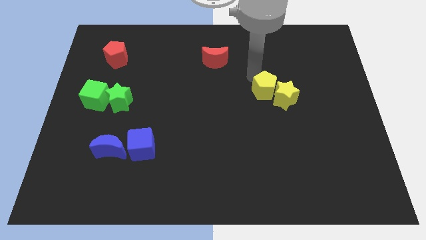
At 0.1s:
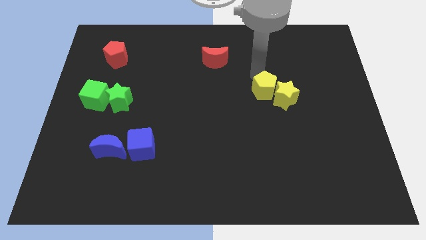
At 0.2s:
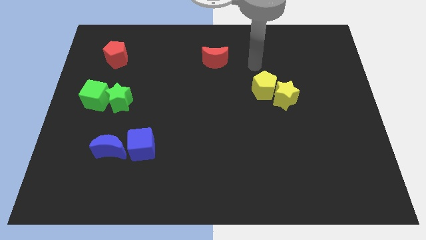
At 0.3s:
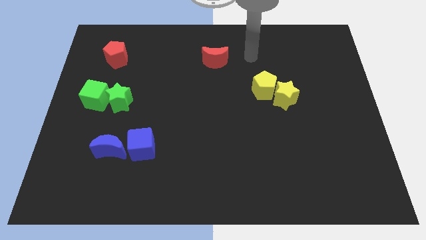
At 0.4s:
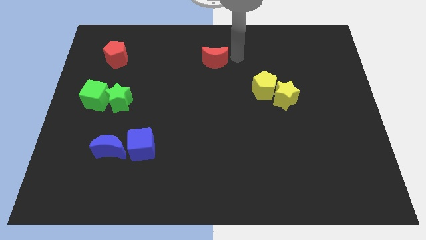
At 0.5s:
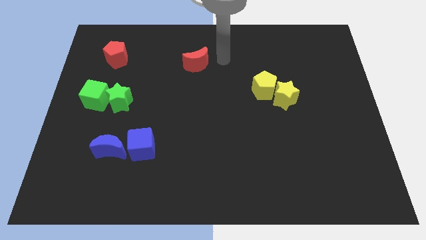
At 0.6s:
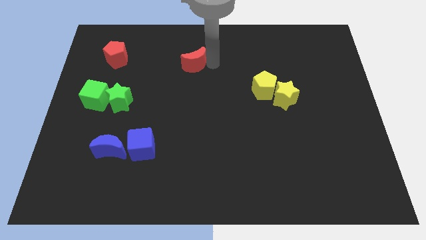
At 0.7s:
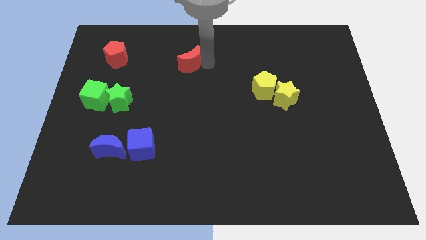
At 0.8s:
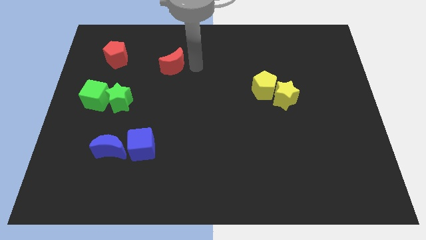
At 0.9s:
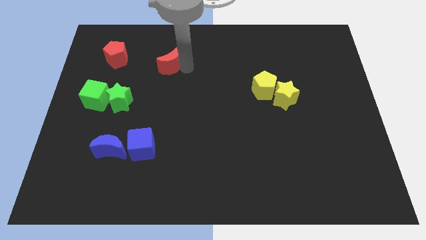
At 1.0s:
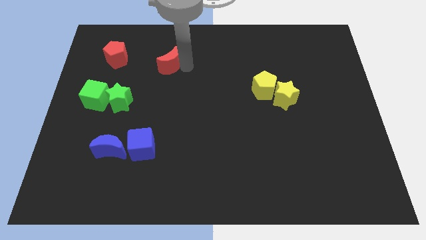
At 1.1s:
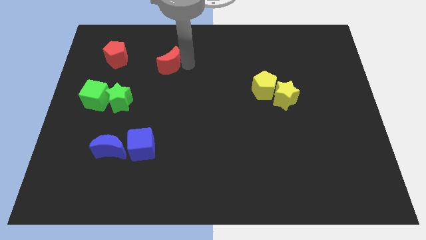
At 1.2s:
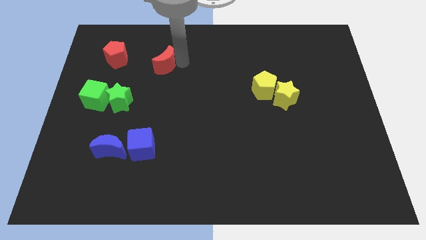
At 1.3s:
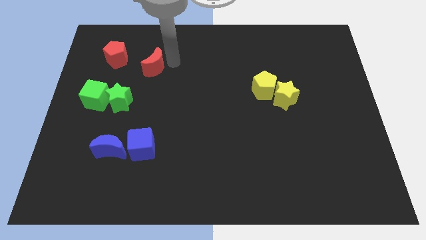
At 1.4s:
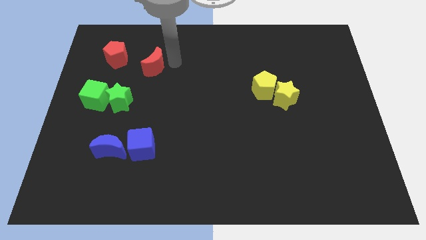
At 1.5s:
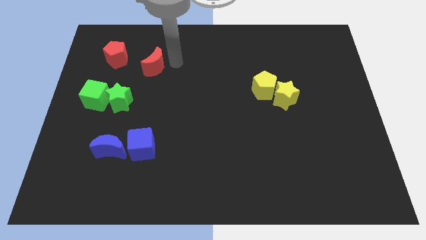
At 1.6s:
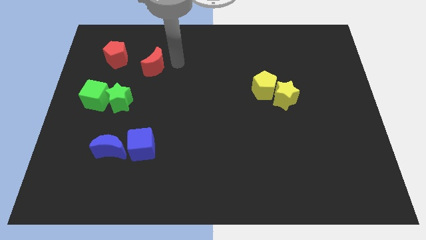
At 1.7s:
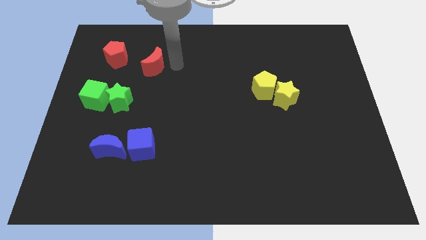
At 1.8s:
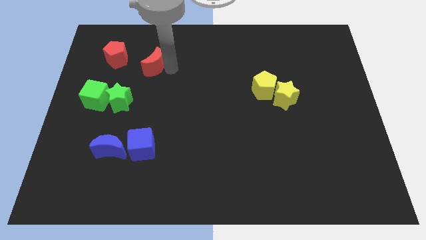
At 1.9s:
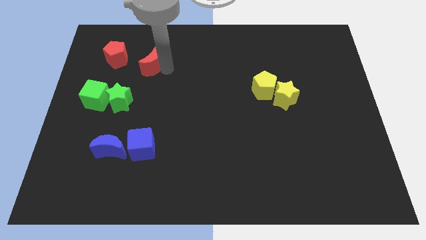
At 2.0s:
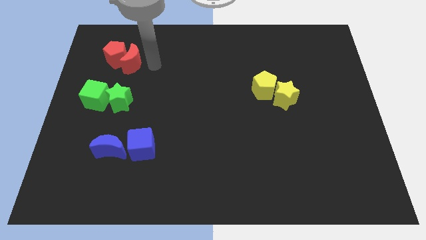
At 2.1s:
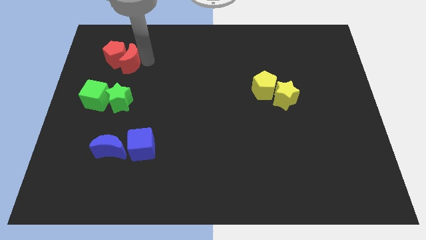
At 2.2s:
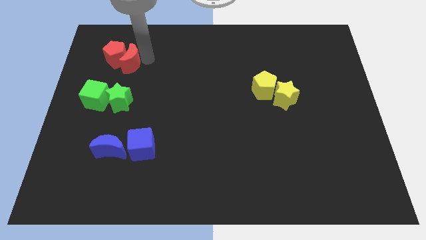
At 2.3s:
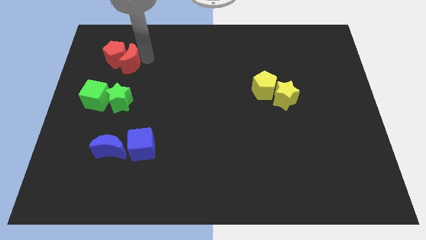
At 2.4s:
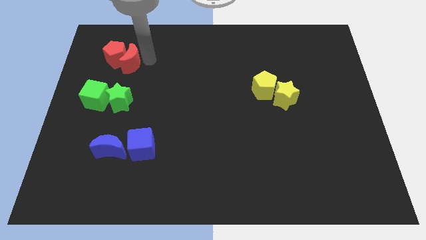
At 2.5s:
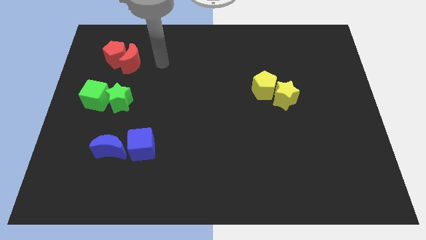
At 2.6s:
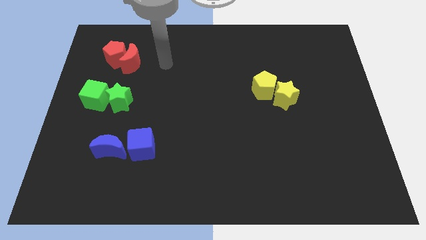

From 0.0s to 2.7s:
place the red moon above the green star

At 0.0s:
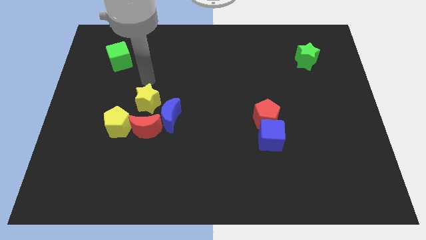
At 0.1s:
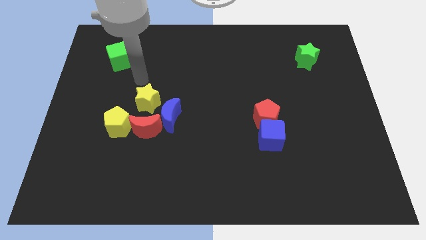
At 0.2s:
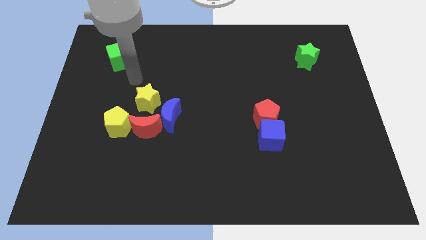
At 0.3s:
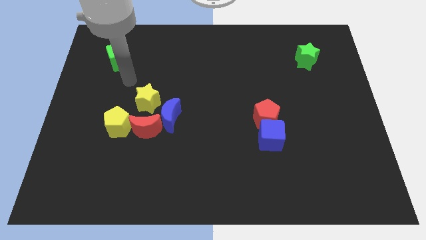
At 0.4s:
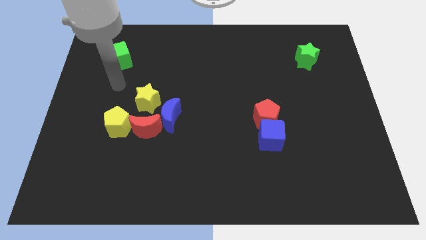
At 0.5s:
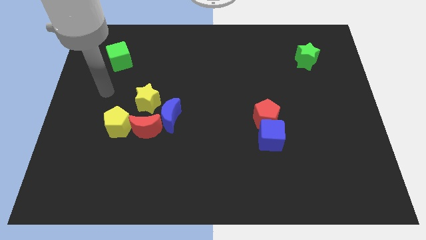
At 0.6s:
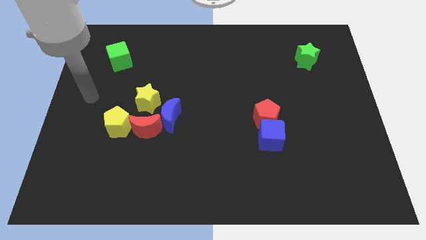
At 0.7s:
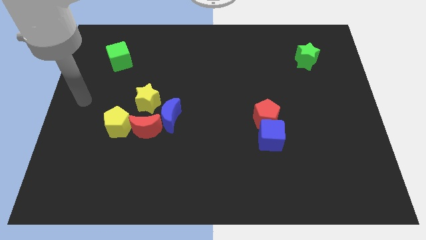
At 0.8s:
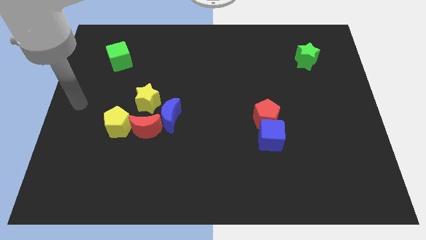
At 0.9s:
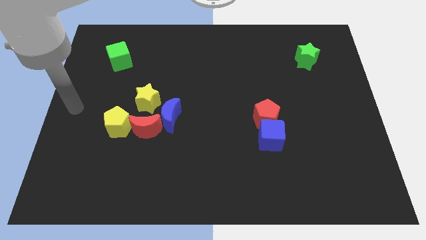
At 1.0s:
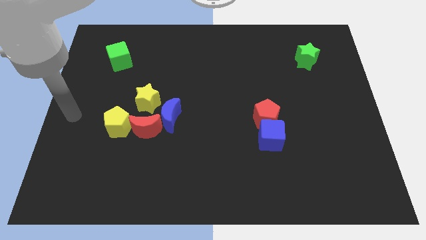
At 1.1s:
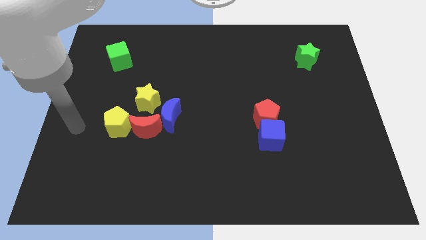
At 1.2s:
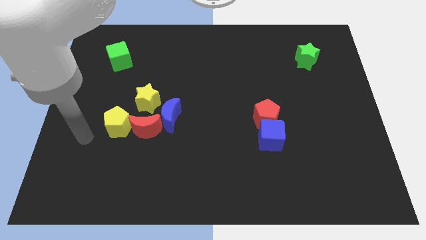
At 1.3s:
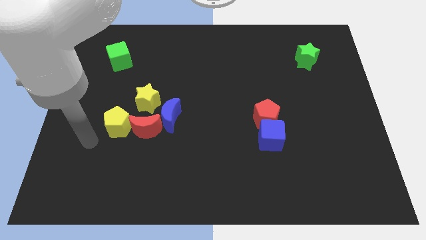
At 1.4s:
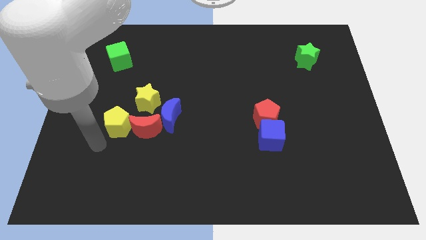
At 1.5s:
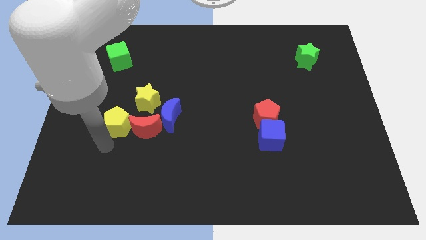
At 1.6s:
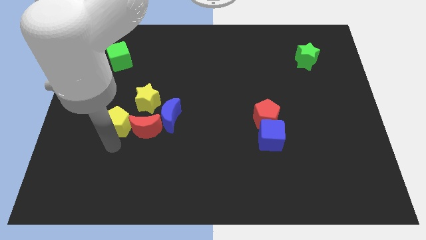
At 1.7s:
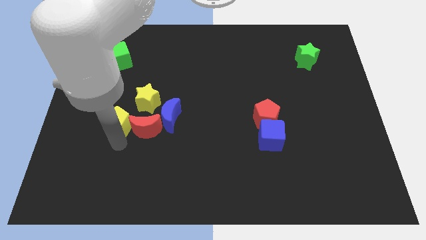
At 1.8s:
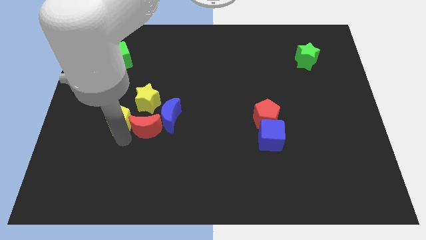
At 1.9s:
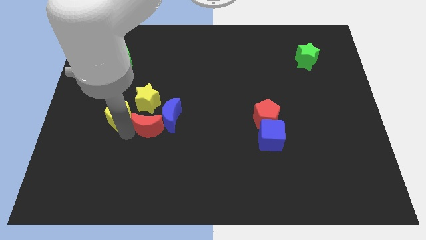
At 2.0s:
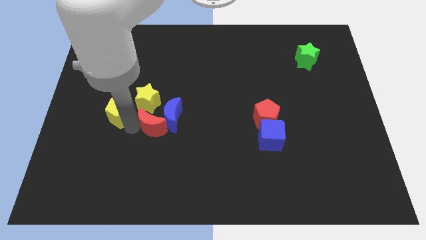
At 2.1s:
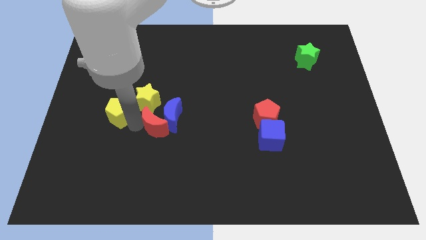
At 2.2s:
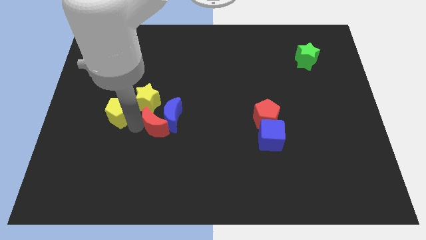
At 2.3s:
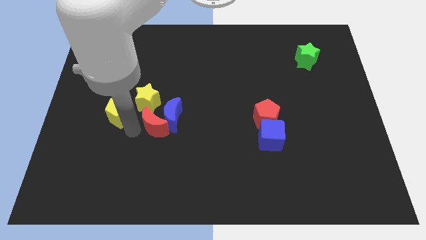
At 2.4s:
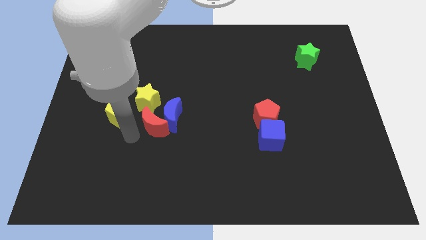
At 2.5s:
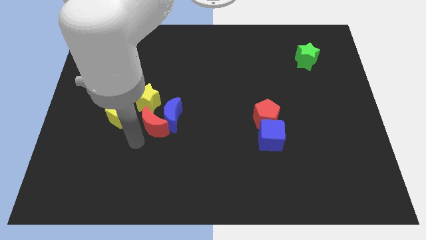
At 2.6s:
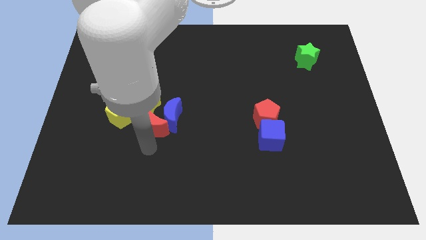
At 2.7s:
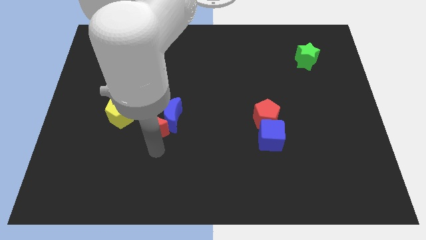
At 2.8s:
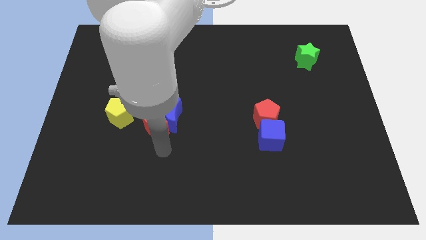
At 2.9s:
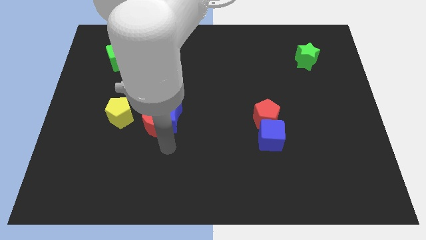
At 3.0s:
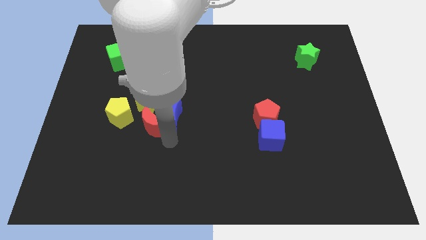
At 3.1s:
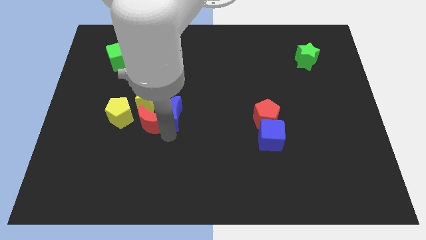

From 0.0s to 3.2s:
separate yellow pentagon and the red crescent

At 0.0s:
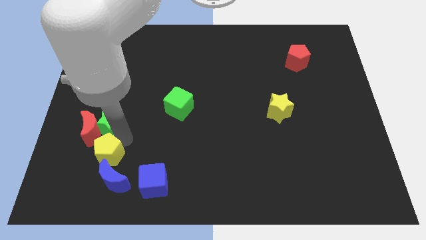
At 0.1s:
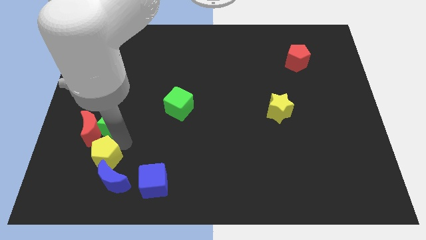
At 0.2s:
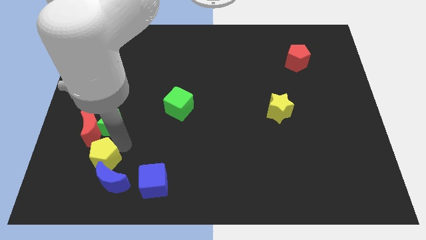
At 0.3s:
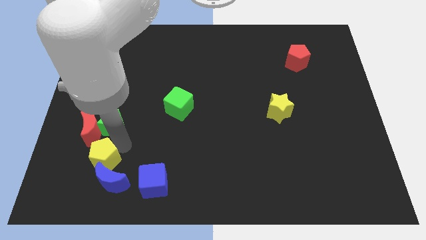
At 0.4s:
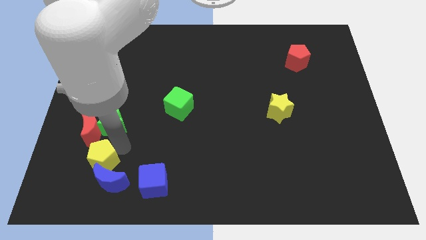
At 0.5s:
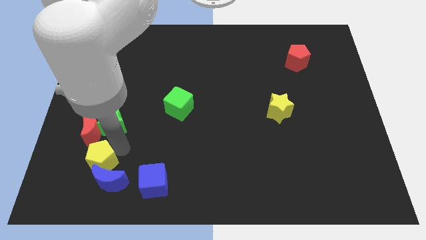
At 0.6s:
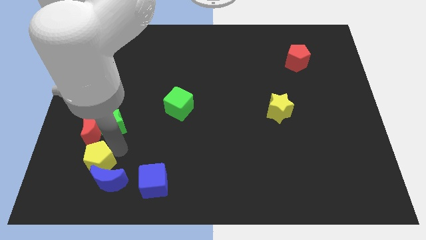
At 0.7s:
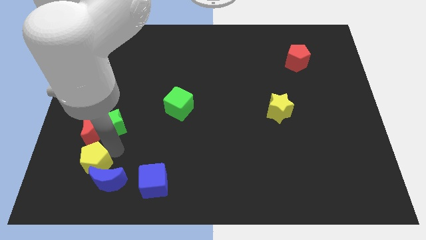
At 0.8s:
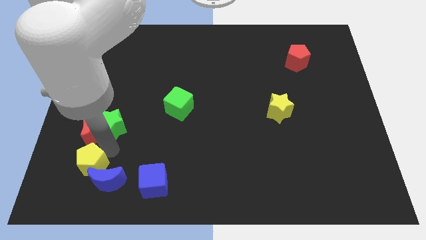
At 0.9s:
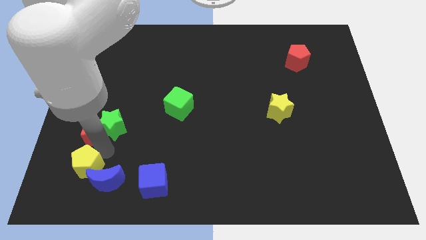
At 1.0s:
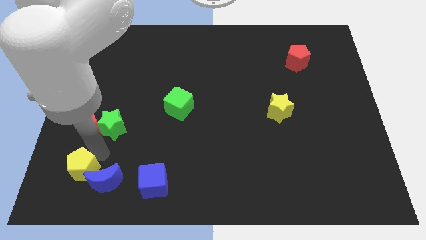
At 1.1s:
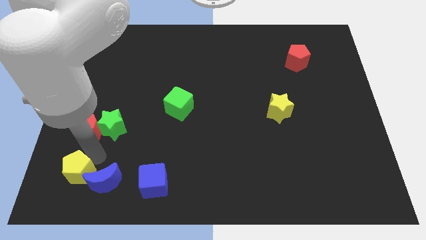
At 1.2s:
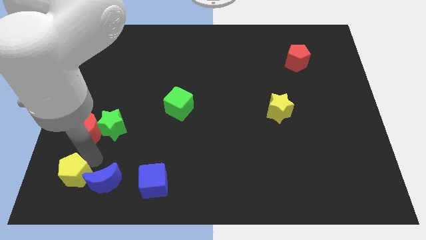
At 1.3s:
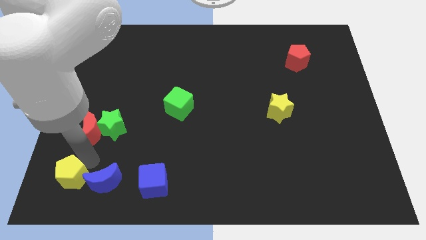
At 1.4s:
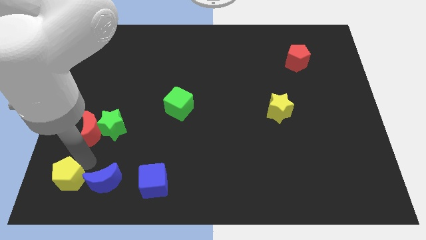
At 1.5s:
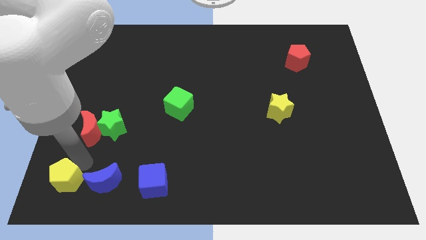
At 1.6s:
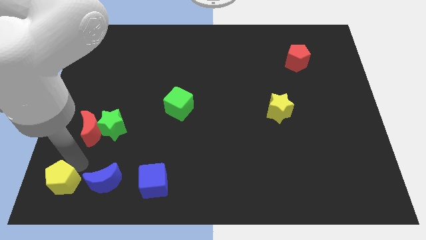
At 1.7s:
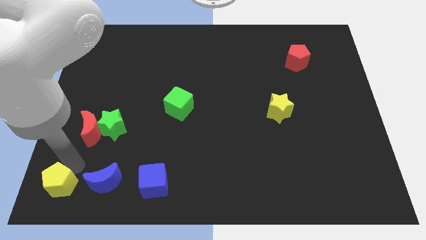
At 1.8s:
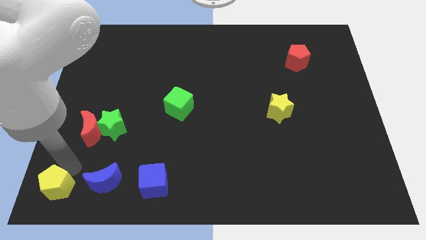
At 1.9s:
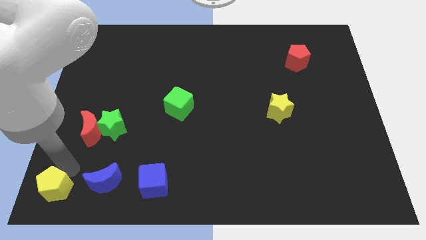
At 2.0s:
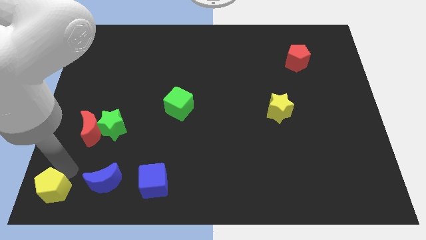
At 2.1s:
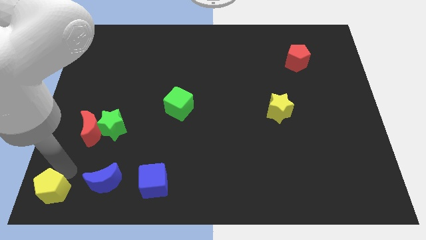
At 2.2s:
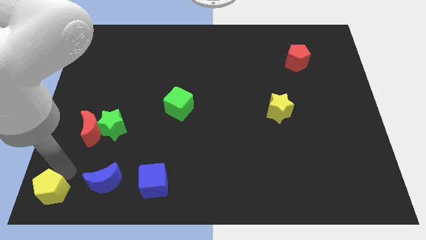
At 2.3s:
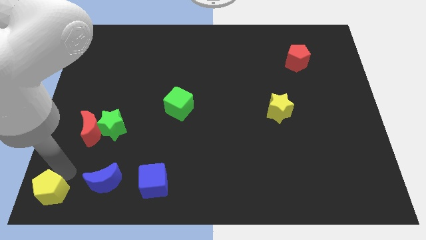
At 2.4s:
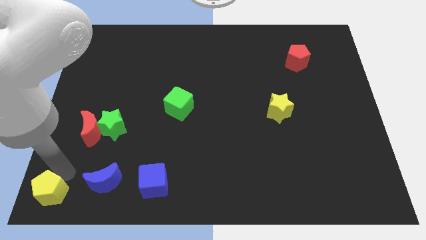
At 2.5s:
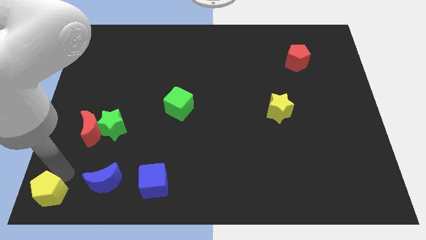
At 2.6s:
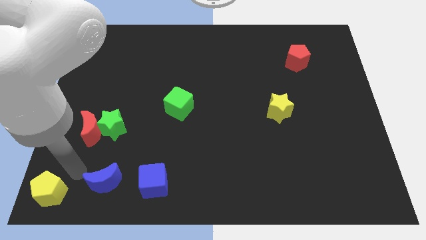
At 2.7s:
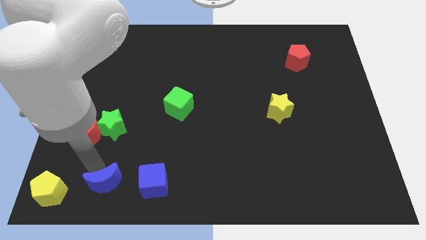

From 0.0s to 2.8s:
move the yellow penatgon to the bottom left of the board

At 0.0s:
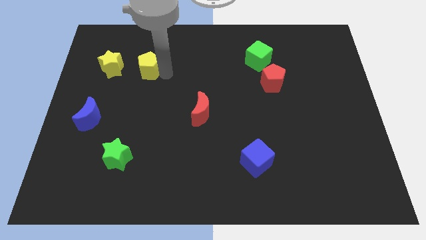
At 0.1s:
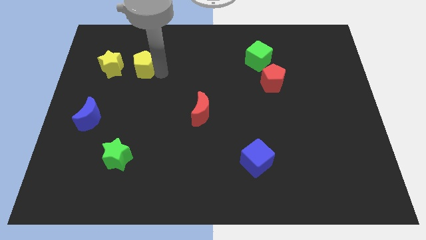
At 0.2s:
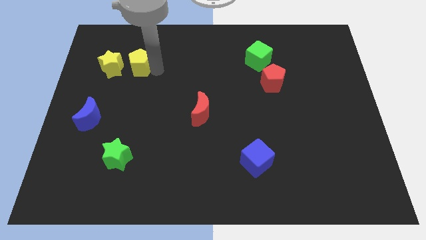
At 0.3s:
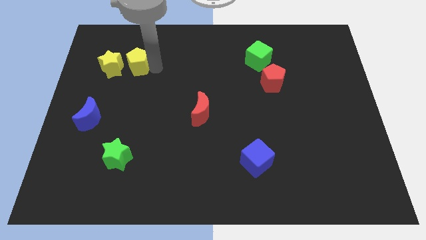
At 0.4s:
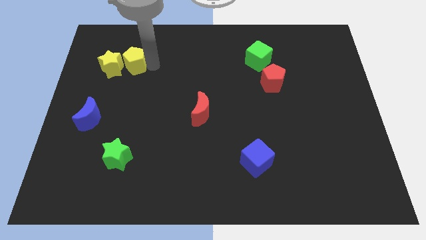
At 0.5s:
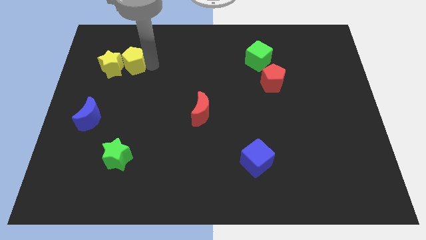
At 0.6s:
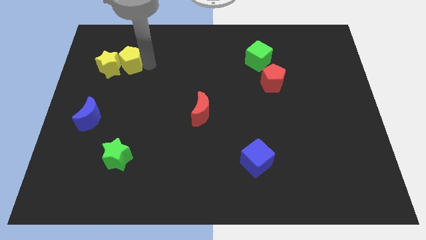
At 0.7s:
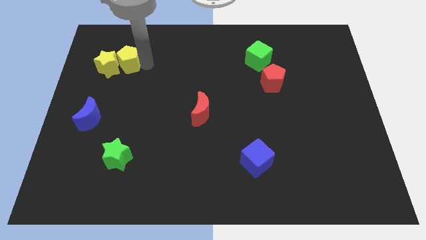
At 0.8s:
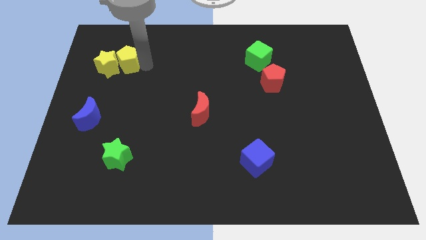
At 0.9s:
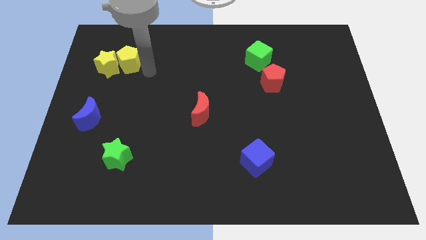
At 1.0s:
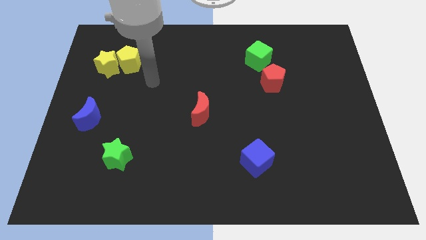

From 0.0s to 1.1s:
push the yellow pentagon into yellow star
